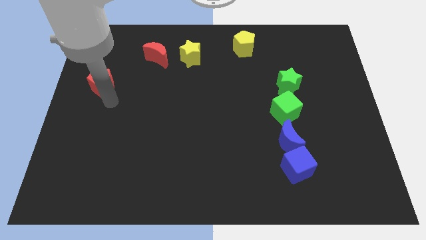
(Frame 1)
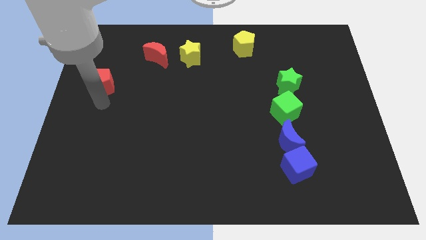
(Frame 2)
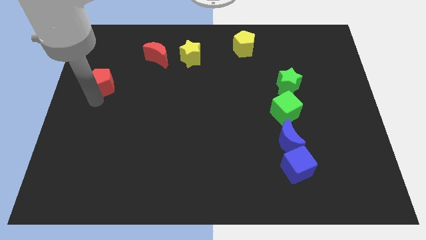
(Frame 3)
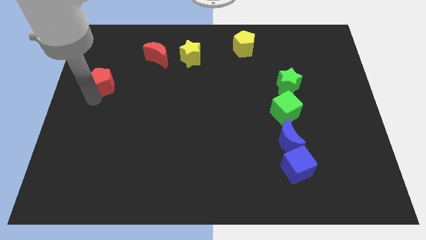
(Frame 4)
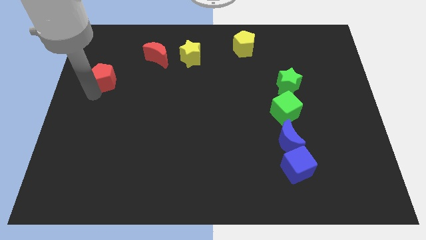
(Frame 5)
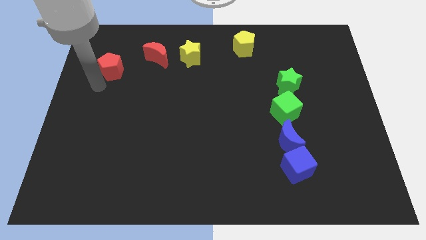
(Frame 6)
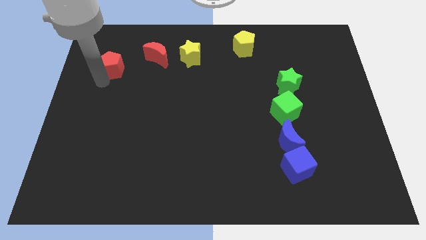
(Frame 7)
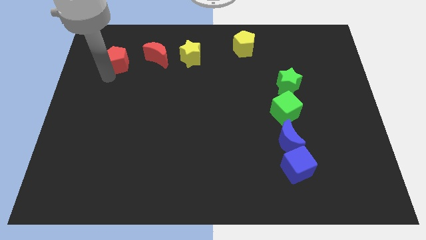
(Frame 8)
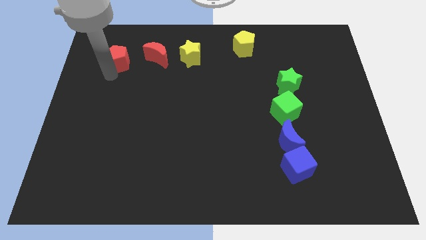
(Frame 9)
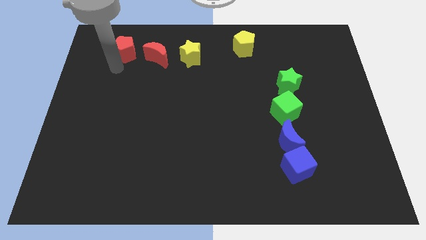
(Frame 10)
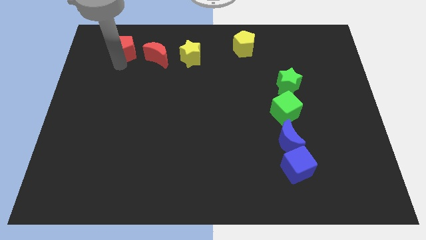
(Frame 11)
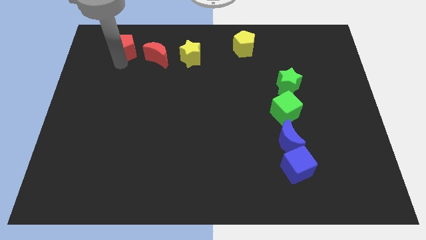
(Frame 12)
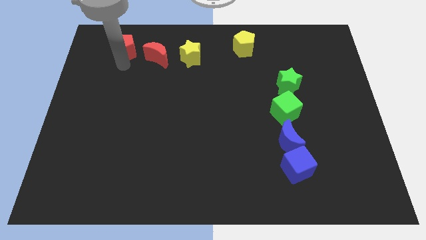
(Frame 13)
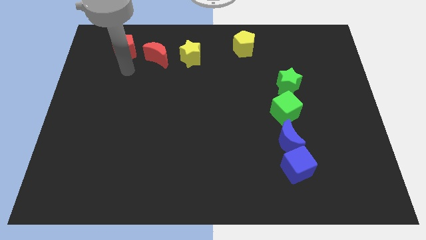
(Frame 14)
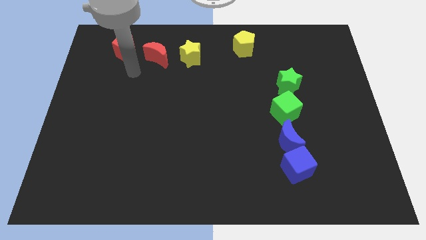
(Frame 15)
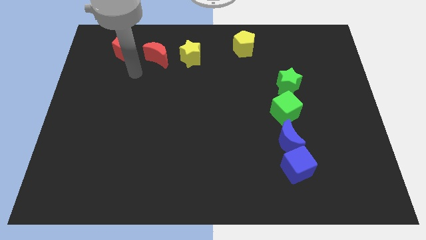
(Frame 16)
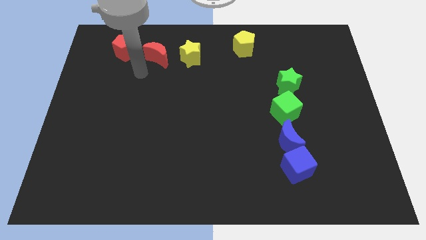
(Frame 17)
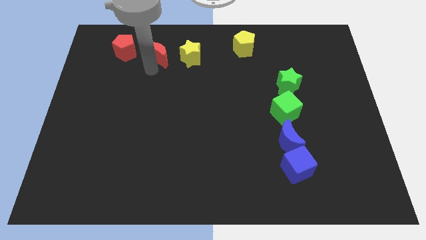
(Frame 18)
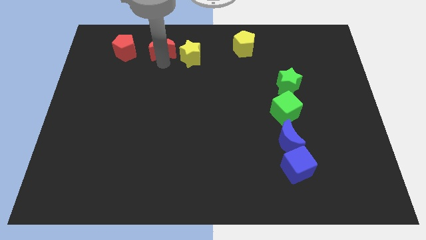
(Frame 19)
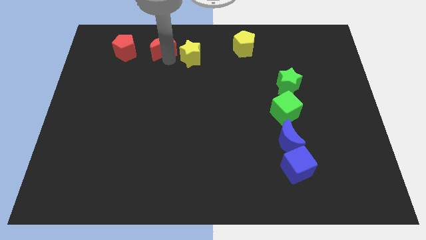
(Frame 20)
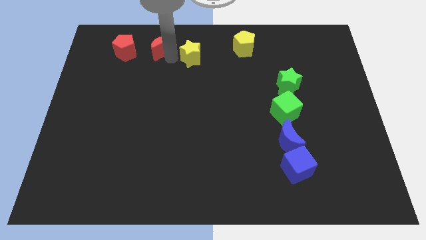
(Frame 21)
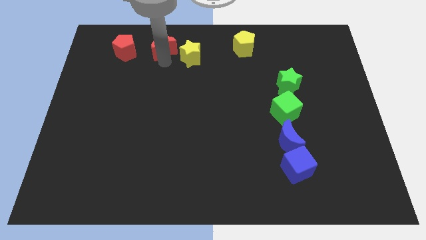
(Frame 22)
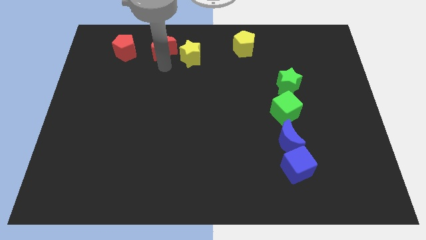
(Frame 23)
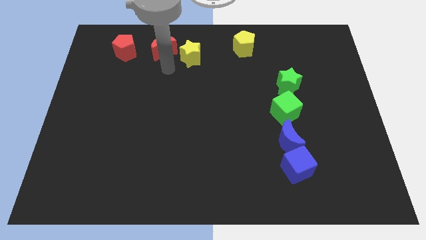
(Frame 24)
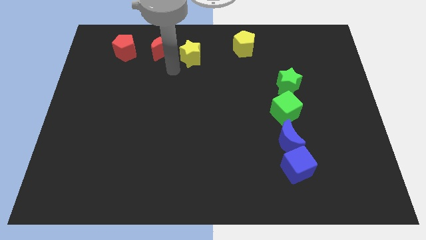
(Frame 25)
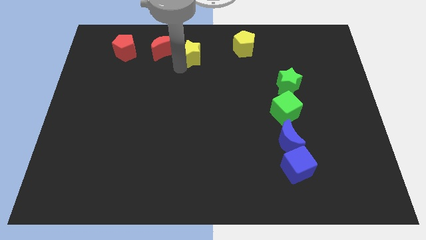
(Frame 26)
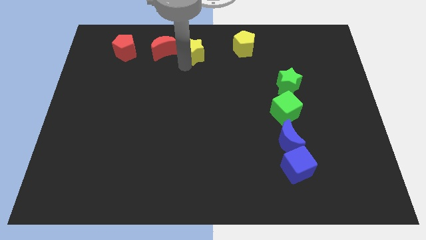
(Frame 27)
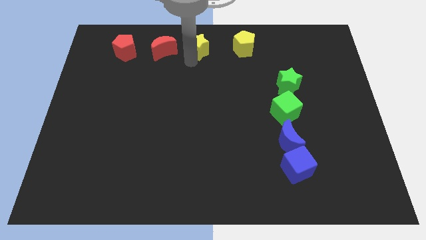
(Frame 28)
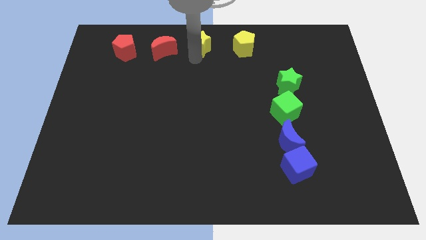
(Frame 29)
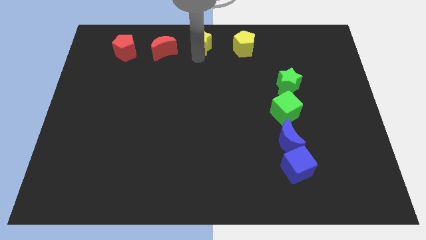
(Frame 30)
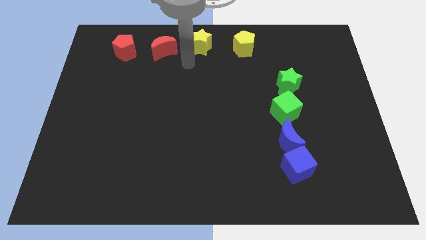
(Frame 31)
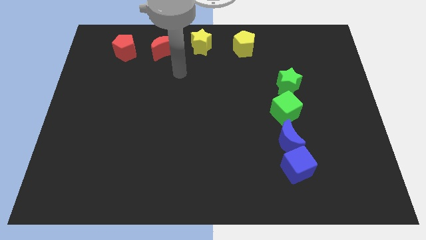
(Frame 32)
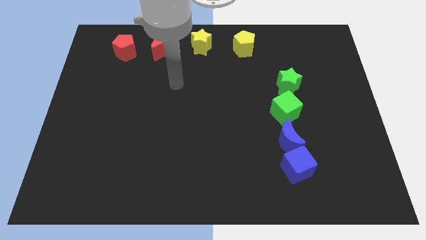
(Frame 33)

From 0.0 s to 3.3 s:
make the horizontal line with the red crescent and pentagon and yellow star and yellow pentagon

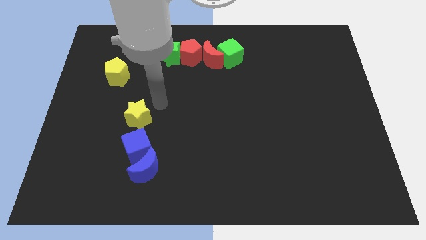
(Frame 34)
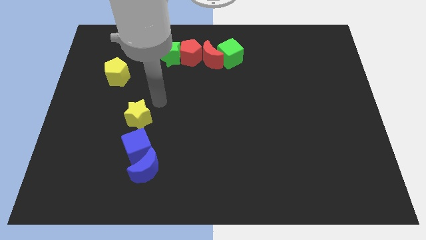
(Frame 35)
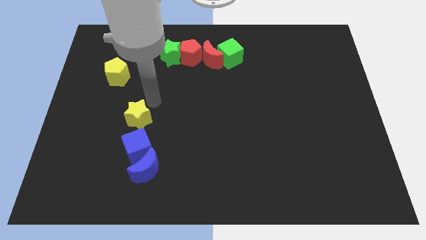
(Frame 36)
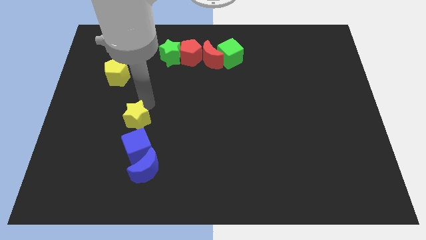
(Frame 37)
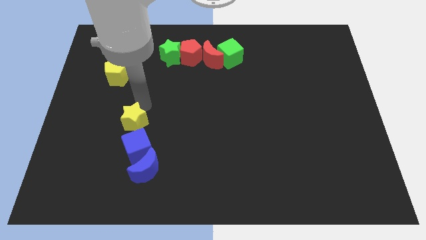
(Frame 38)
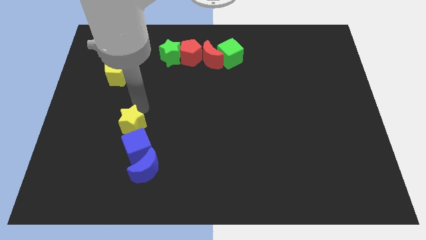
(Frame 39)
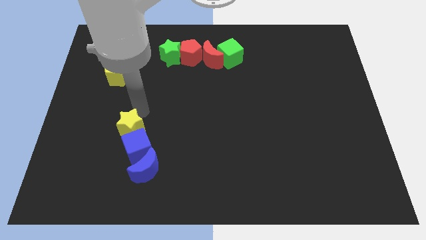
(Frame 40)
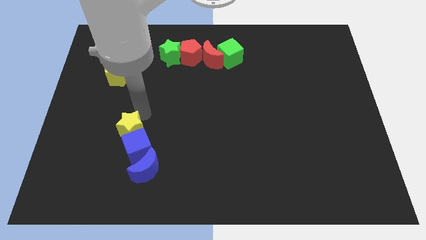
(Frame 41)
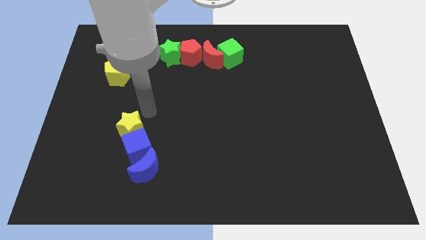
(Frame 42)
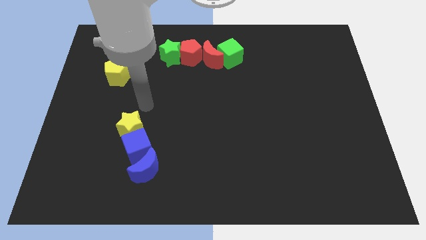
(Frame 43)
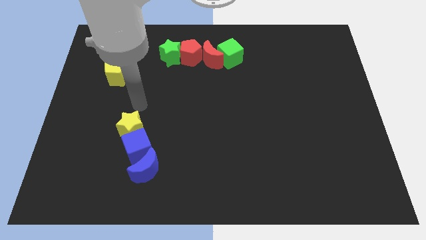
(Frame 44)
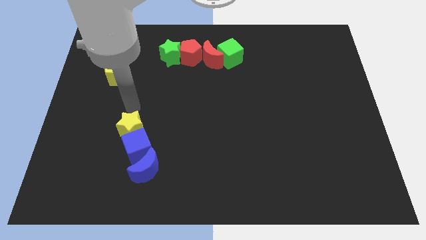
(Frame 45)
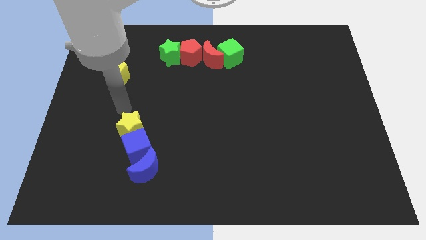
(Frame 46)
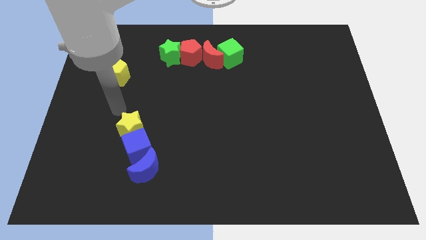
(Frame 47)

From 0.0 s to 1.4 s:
push the yellow star close to the blue cube

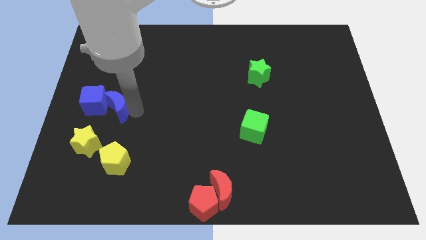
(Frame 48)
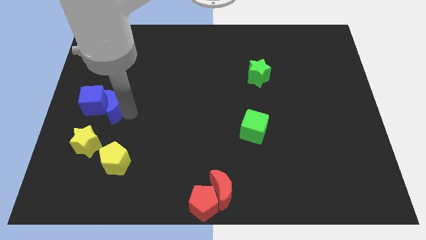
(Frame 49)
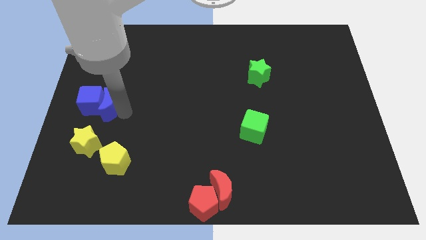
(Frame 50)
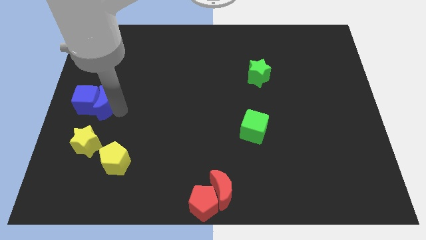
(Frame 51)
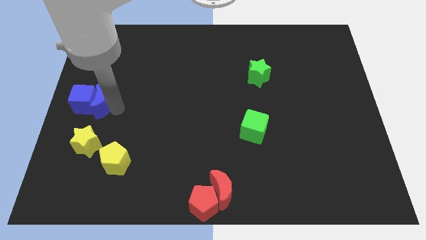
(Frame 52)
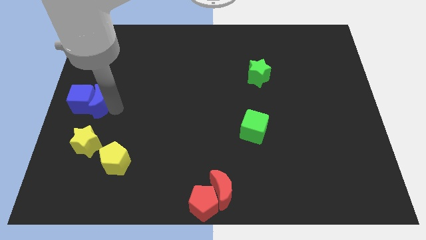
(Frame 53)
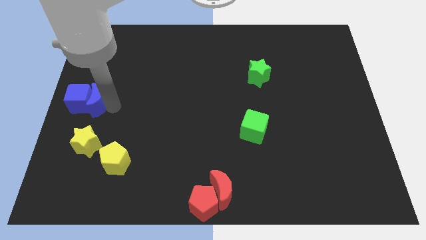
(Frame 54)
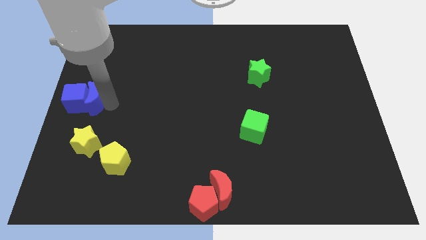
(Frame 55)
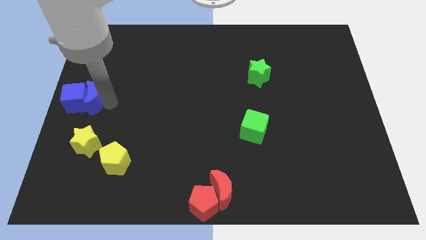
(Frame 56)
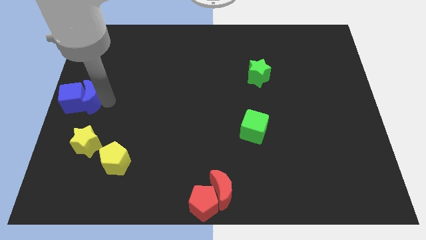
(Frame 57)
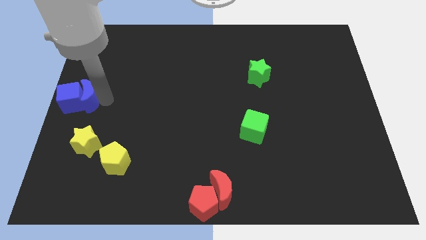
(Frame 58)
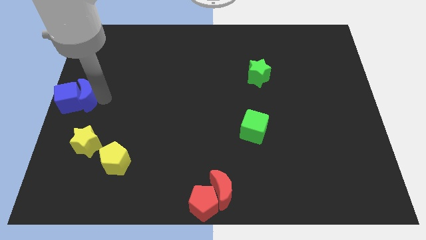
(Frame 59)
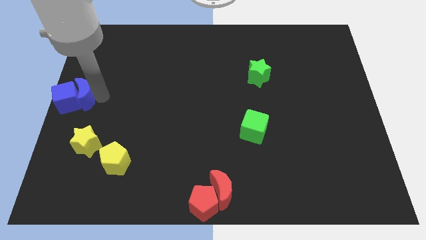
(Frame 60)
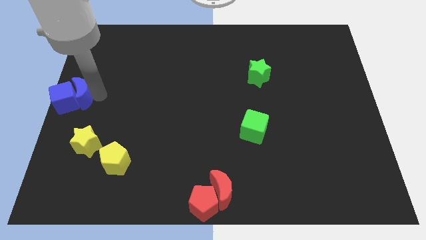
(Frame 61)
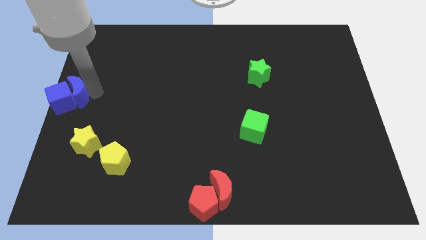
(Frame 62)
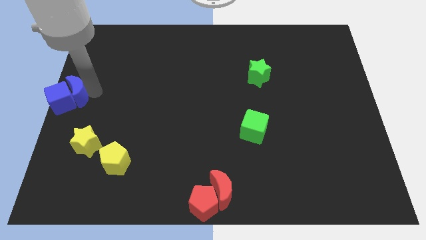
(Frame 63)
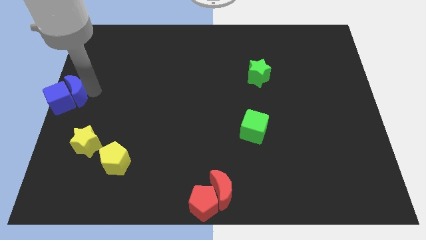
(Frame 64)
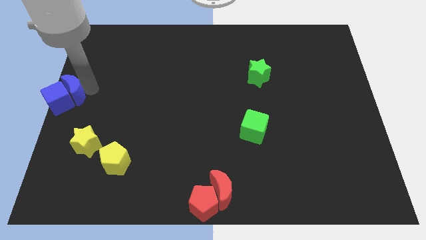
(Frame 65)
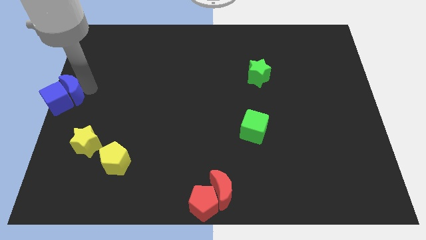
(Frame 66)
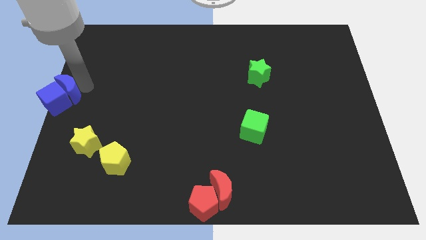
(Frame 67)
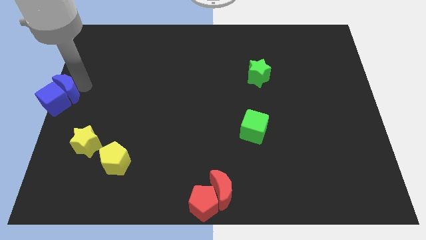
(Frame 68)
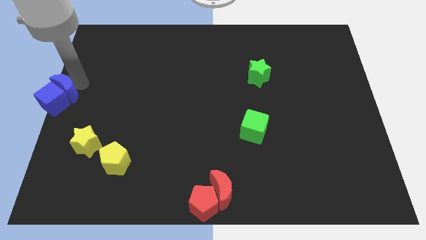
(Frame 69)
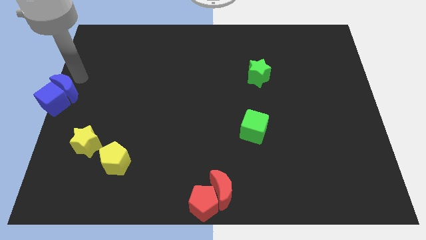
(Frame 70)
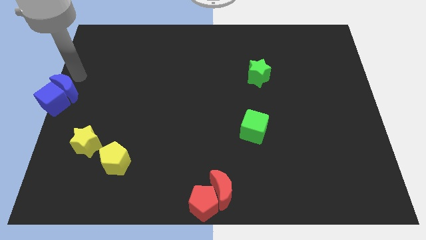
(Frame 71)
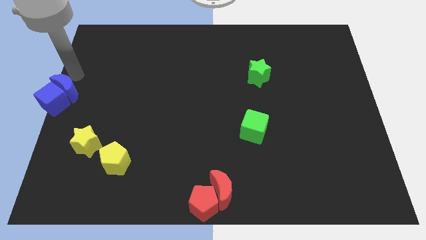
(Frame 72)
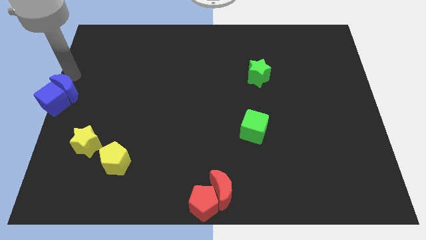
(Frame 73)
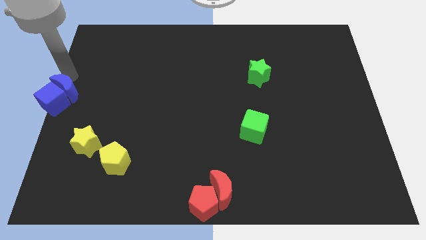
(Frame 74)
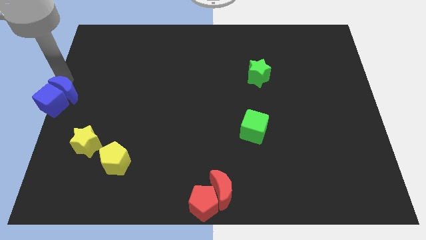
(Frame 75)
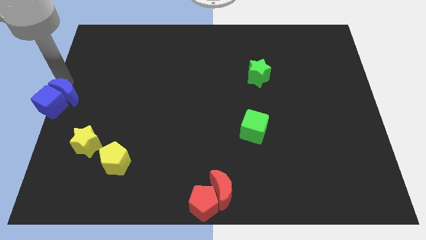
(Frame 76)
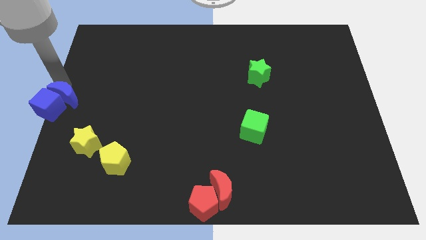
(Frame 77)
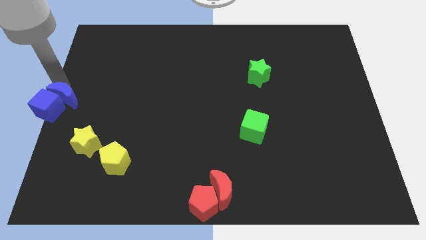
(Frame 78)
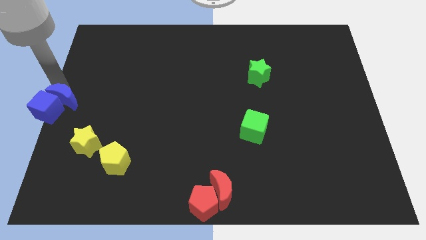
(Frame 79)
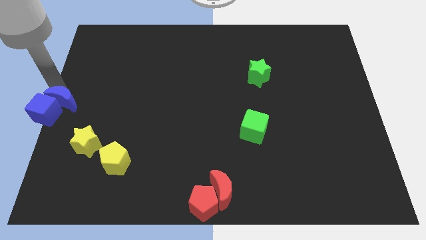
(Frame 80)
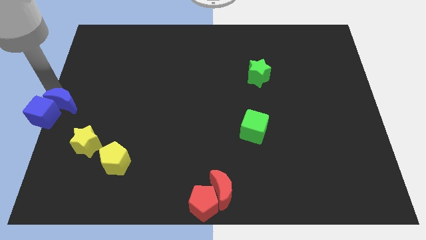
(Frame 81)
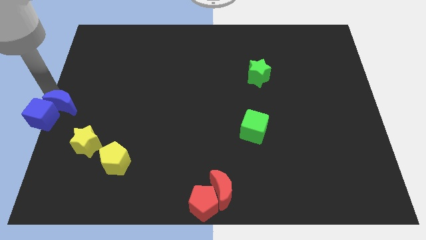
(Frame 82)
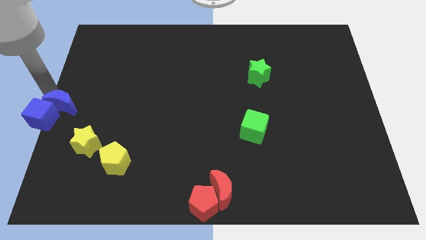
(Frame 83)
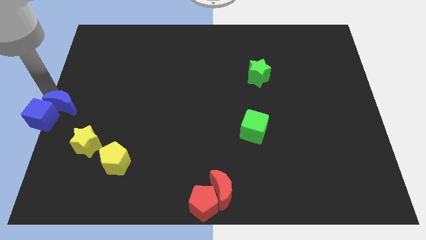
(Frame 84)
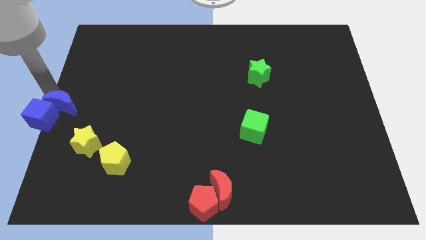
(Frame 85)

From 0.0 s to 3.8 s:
move the blue blocks to the center left of the board

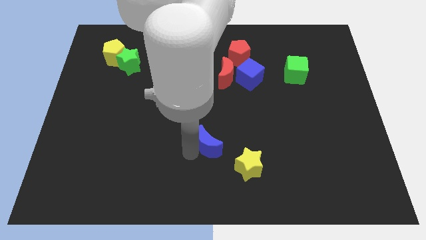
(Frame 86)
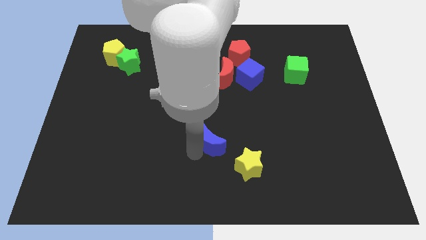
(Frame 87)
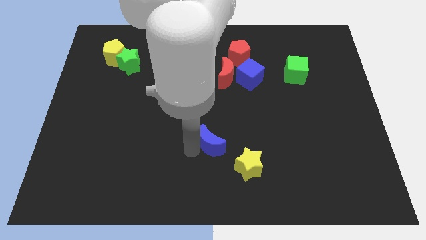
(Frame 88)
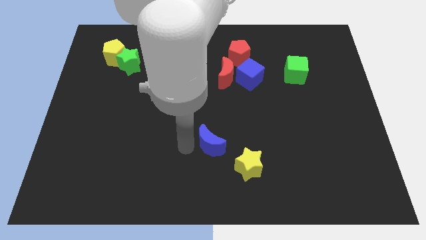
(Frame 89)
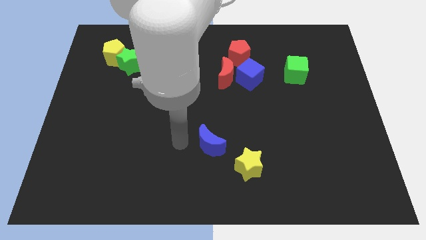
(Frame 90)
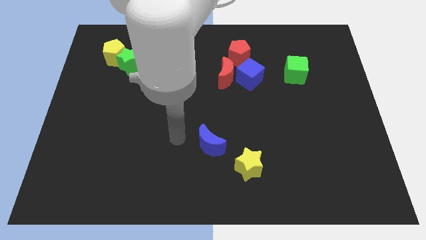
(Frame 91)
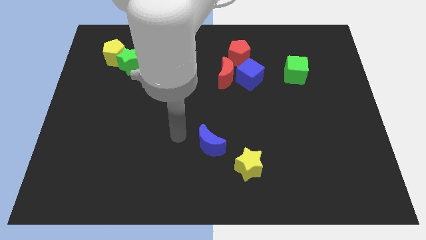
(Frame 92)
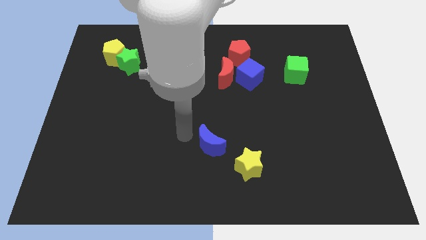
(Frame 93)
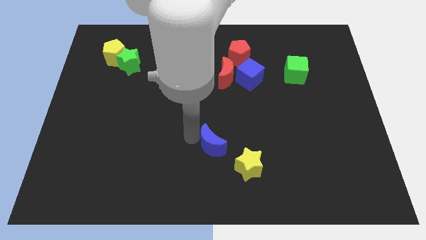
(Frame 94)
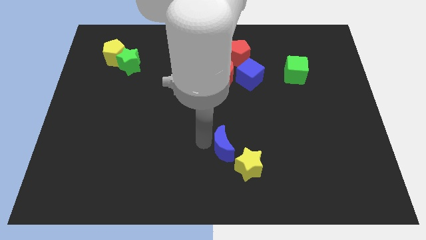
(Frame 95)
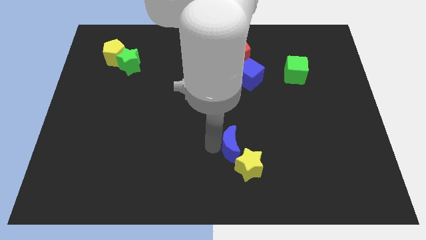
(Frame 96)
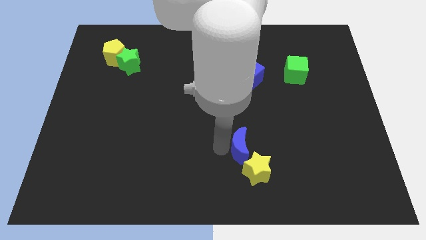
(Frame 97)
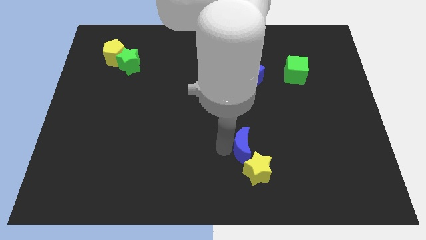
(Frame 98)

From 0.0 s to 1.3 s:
move the blue moon to the top of the yellow star
